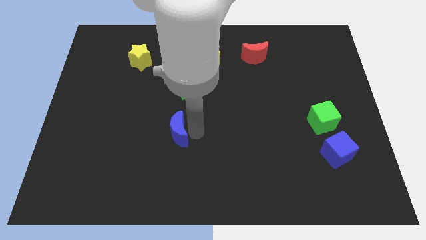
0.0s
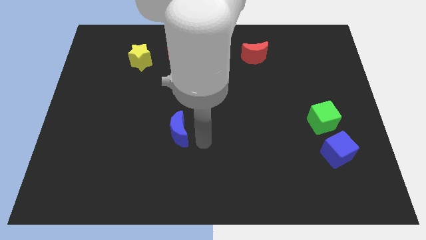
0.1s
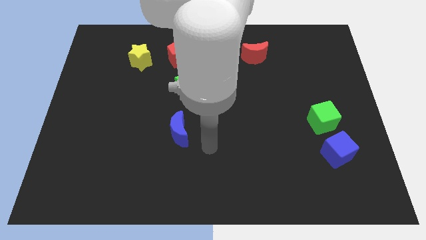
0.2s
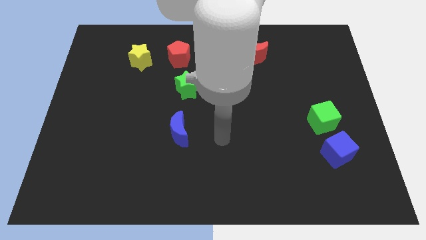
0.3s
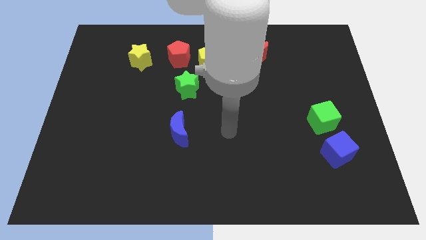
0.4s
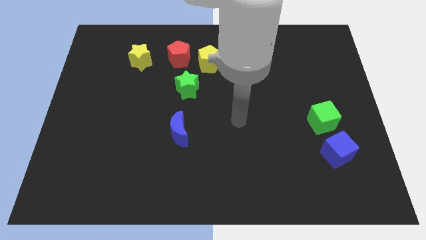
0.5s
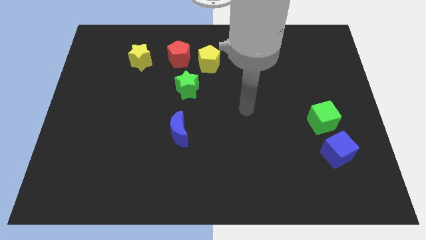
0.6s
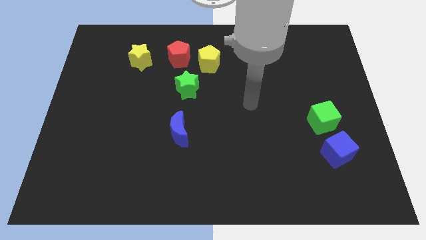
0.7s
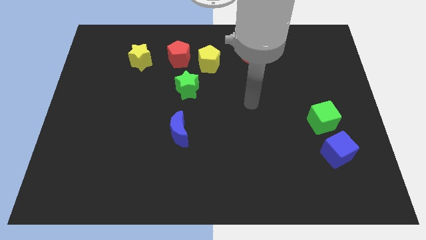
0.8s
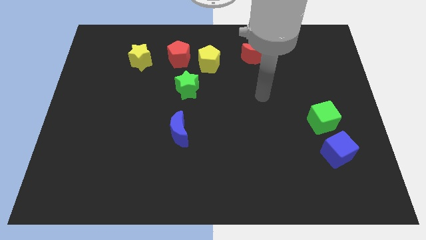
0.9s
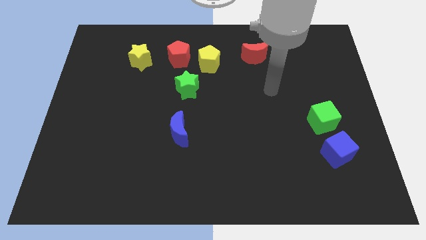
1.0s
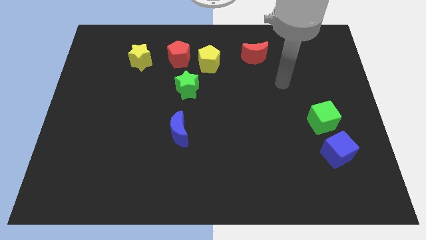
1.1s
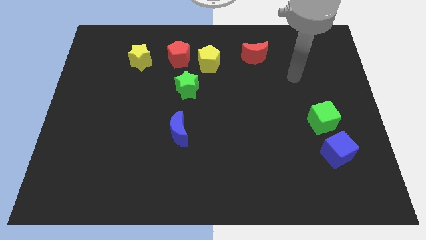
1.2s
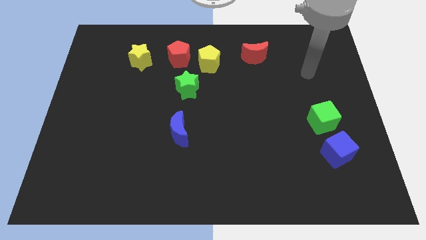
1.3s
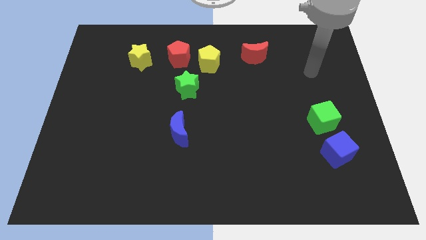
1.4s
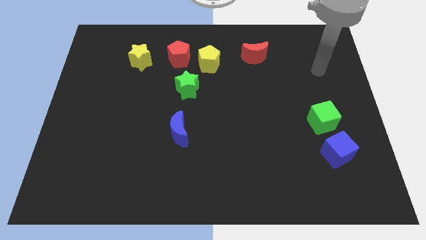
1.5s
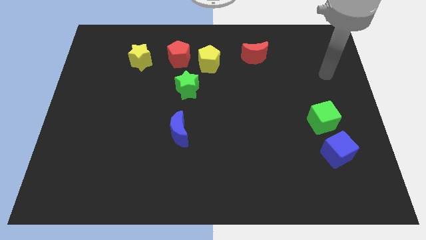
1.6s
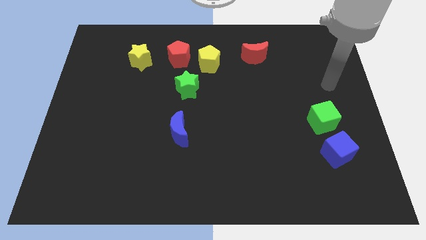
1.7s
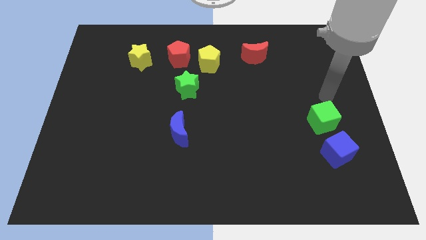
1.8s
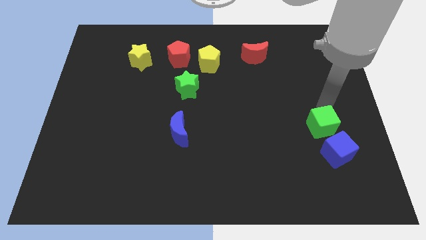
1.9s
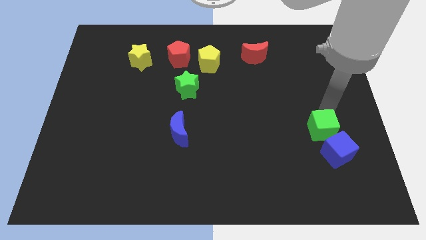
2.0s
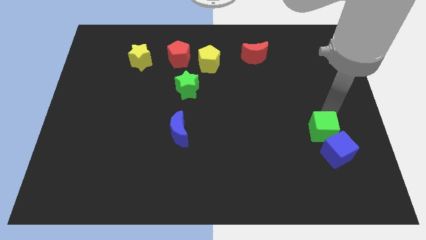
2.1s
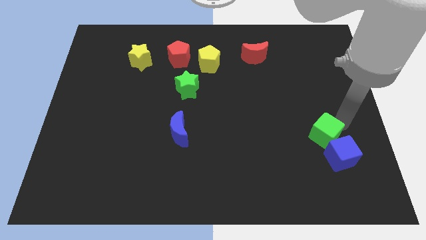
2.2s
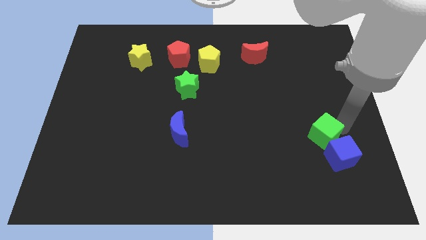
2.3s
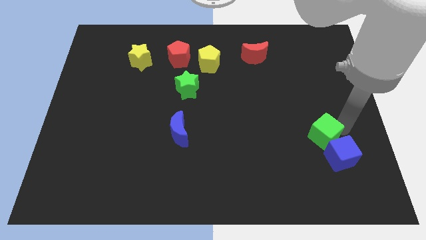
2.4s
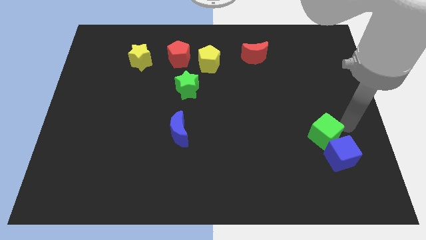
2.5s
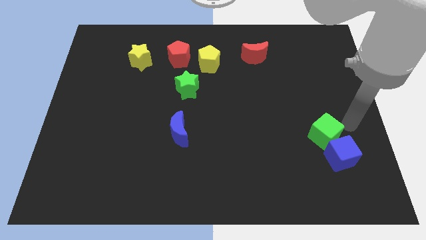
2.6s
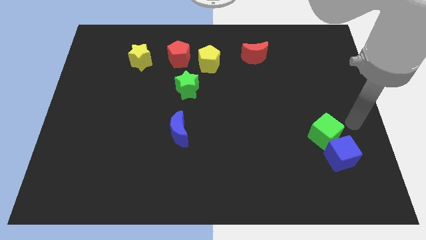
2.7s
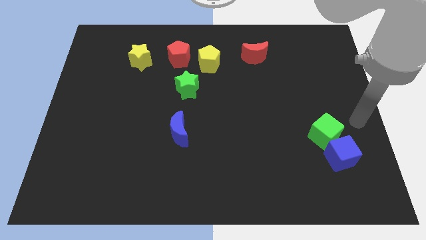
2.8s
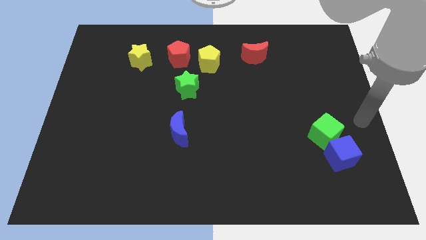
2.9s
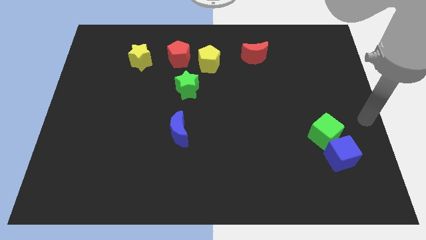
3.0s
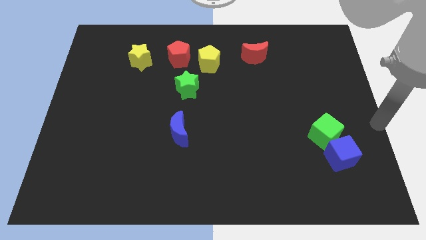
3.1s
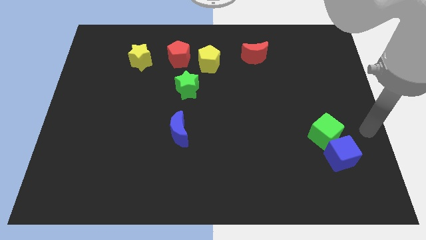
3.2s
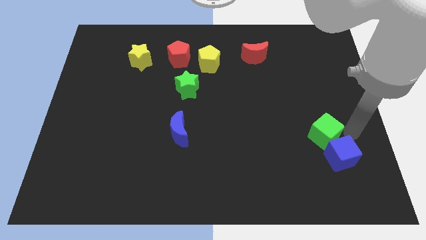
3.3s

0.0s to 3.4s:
push the green cube into the blue cube

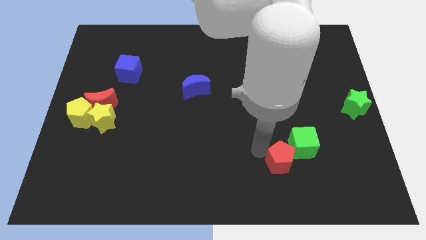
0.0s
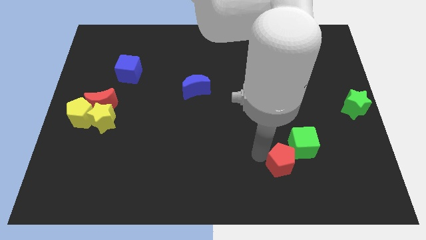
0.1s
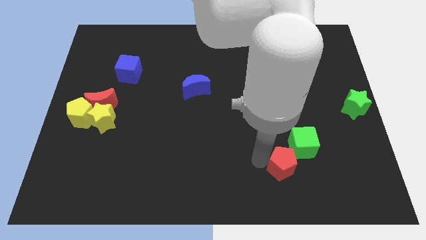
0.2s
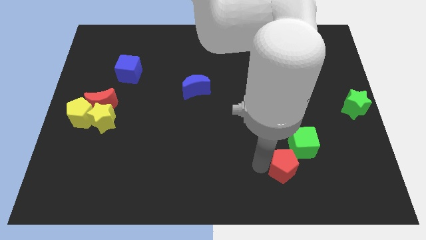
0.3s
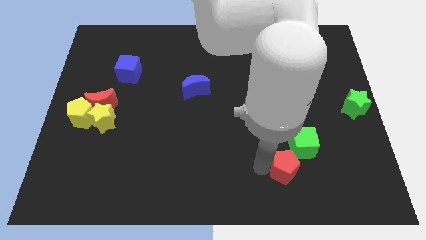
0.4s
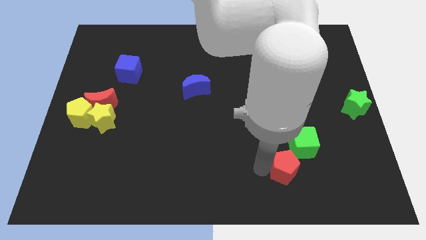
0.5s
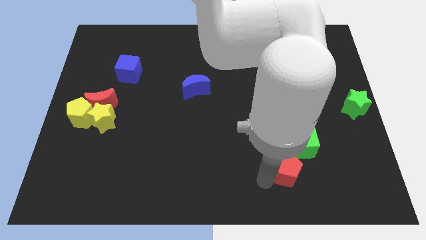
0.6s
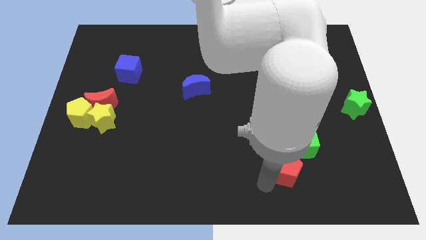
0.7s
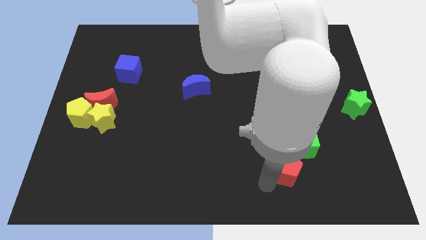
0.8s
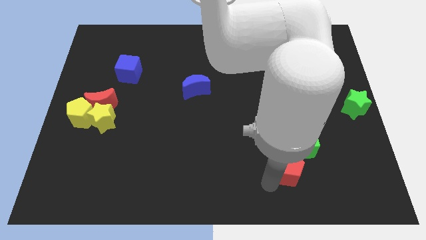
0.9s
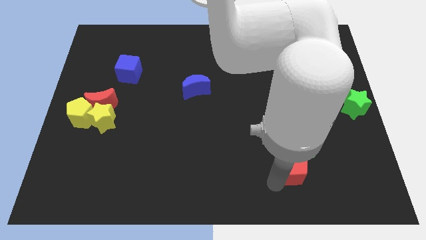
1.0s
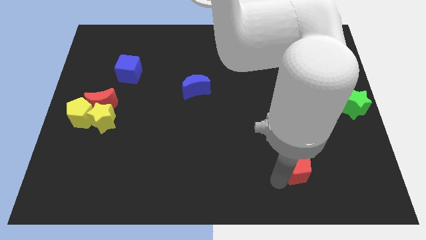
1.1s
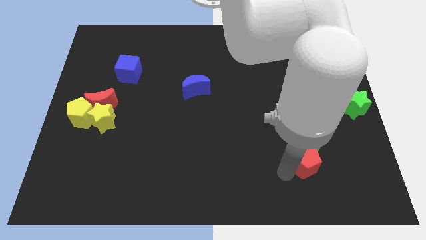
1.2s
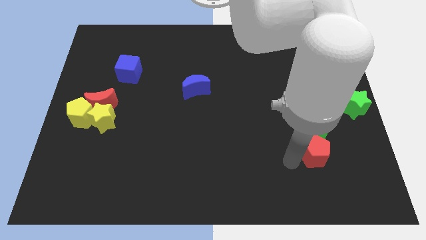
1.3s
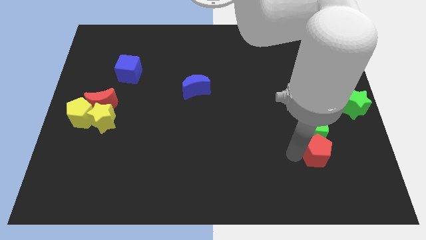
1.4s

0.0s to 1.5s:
place the red pentagon below the green cube

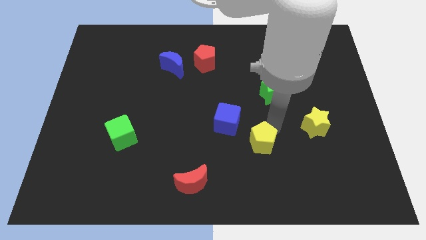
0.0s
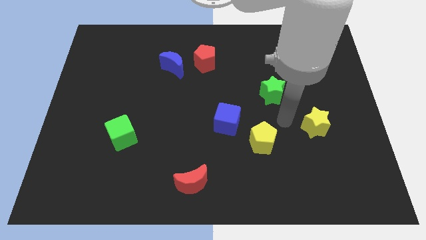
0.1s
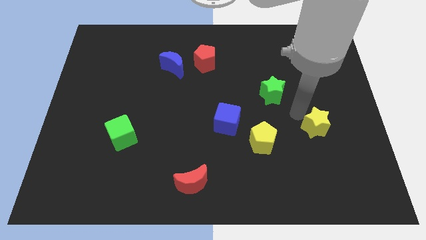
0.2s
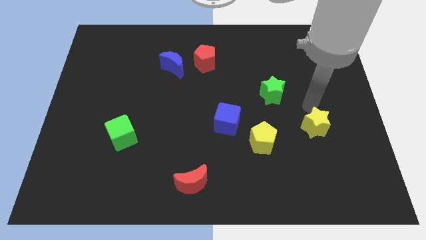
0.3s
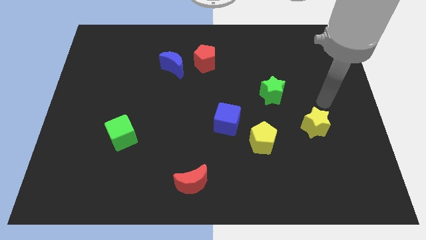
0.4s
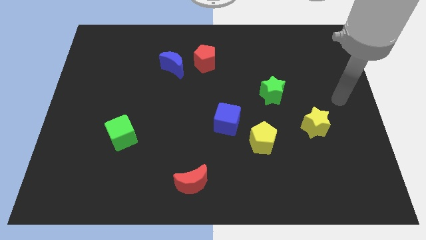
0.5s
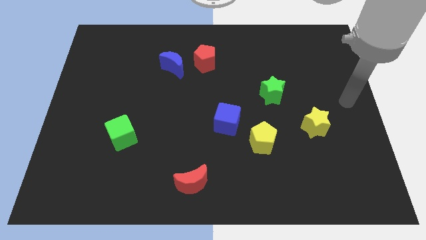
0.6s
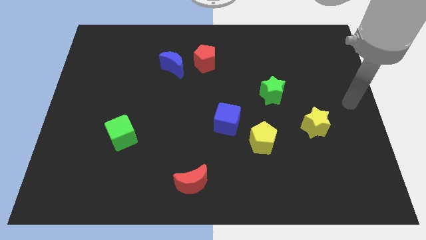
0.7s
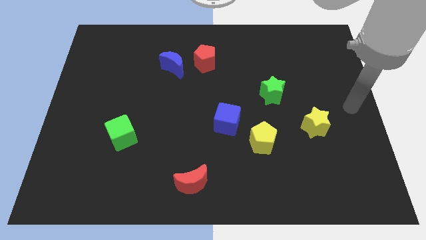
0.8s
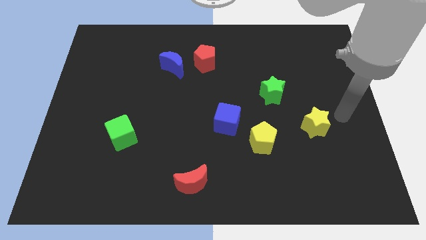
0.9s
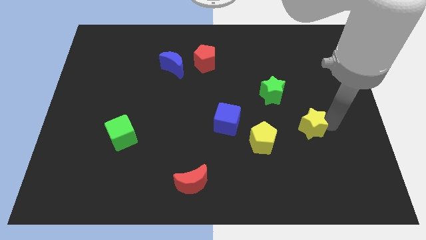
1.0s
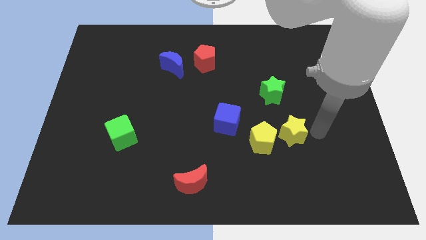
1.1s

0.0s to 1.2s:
move your arm towards the yellow star

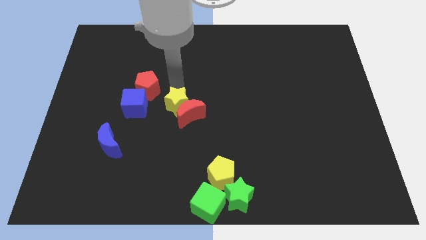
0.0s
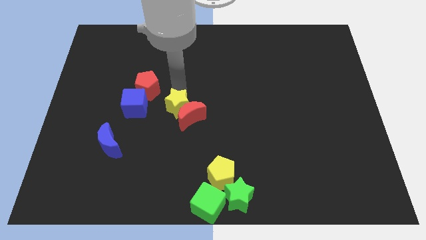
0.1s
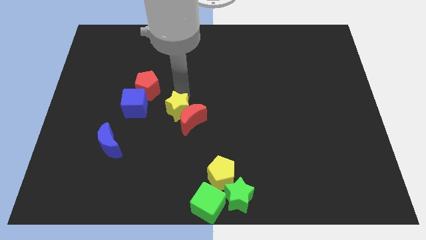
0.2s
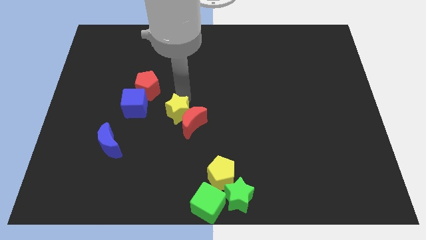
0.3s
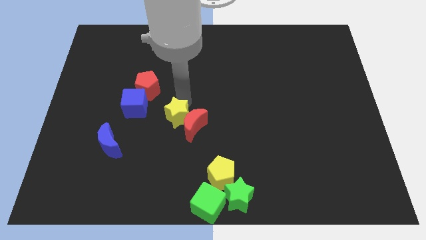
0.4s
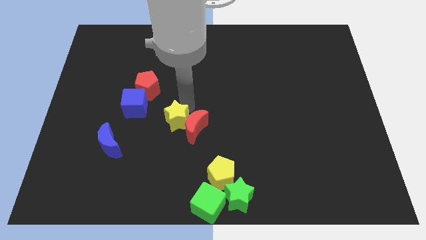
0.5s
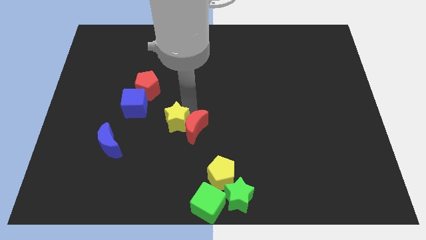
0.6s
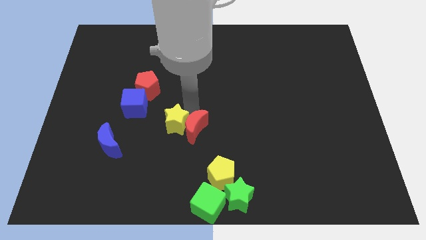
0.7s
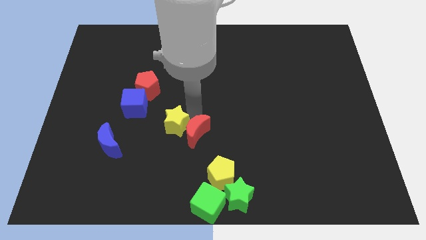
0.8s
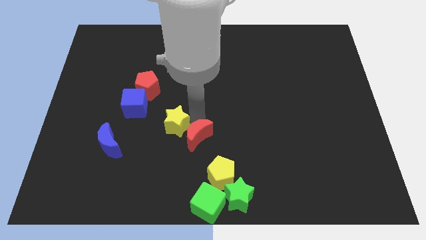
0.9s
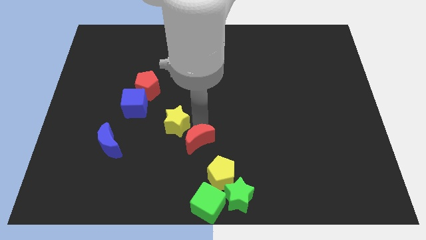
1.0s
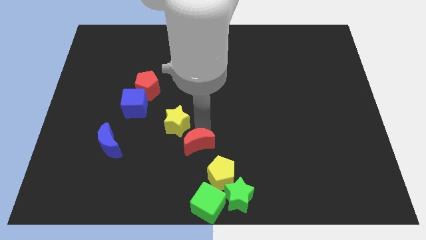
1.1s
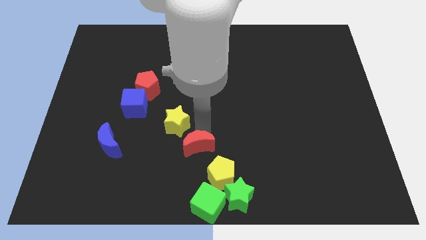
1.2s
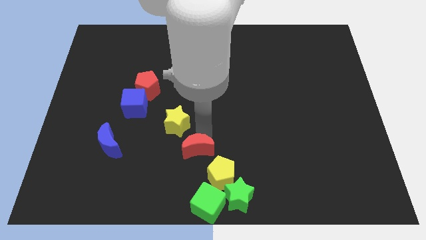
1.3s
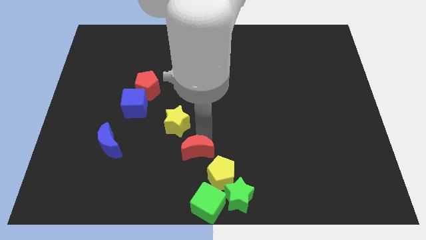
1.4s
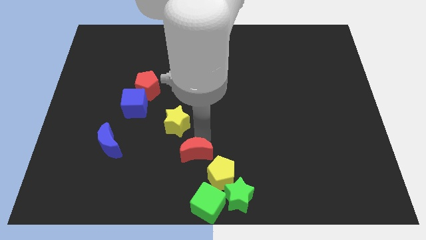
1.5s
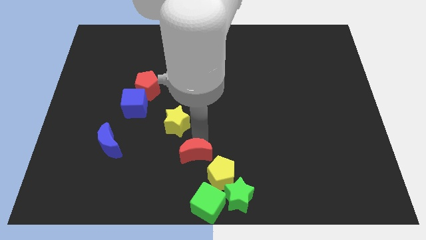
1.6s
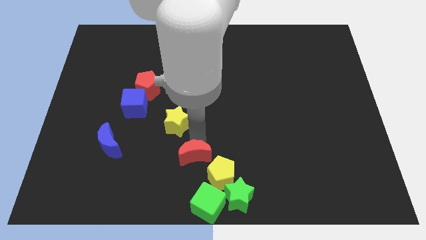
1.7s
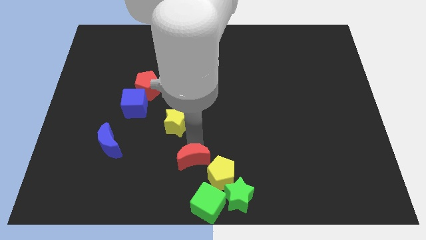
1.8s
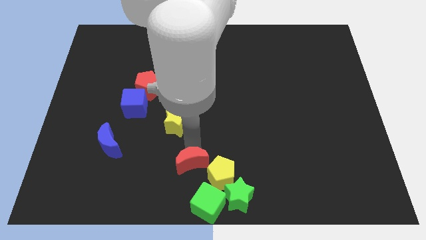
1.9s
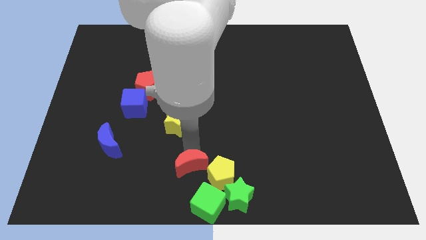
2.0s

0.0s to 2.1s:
separate the red moon from the yellow star

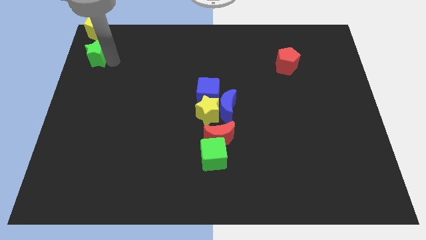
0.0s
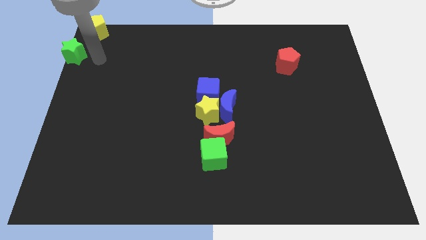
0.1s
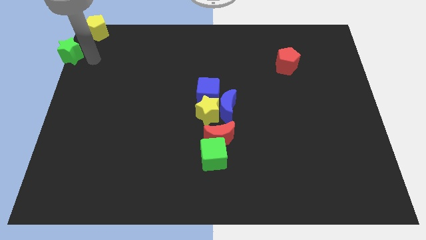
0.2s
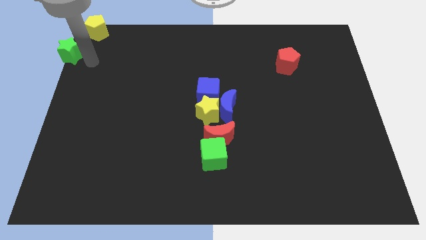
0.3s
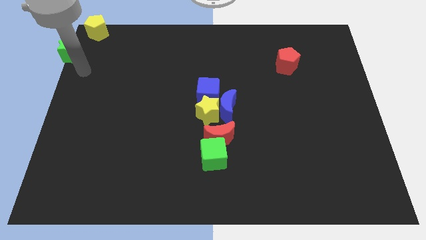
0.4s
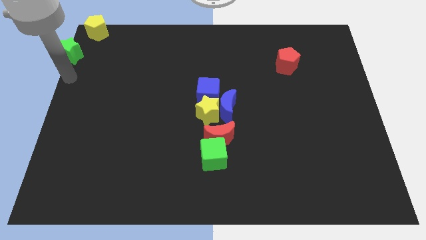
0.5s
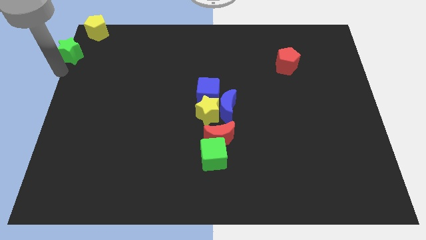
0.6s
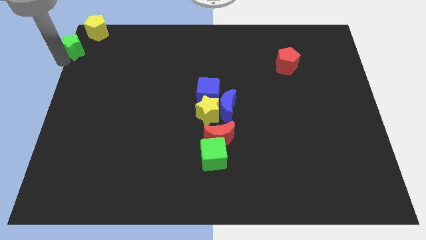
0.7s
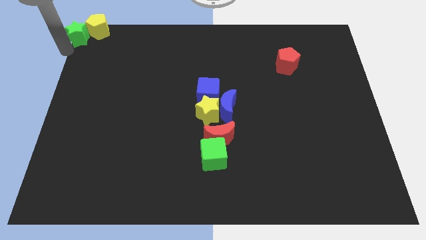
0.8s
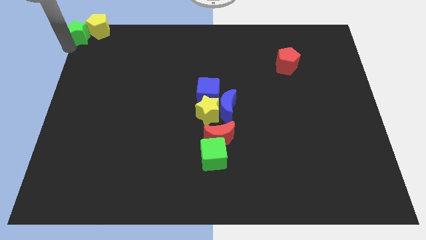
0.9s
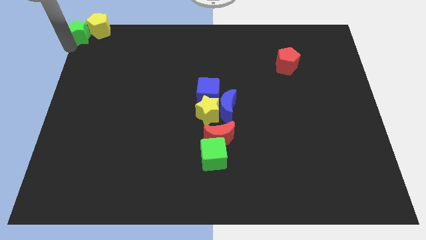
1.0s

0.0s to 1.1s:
move the green star to the left of the yellow pentagon
